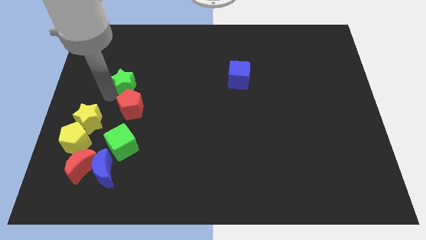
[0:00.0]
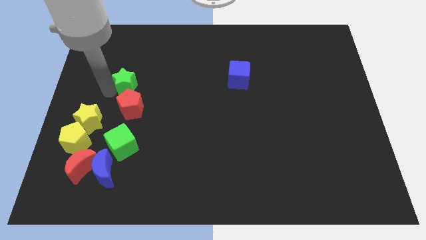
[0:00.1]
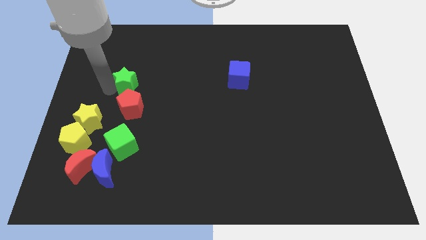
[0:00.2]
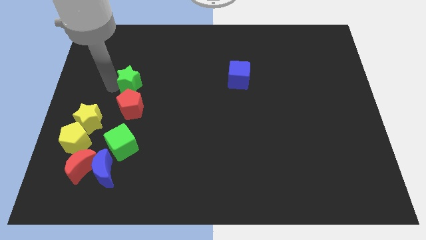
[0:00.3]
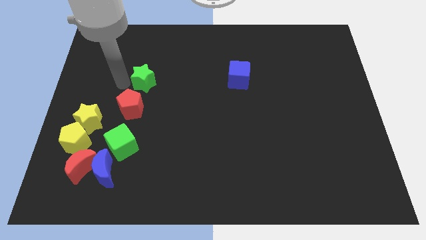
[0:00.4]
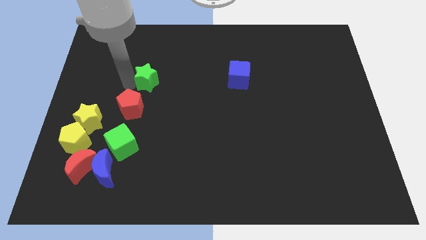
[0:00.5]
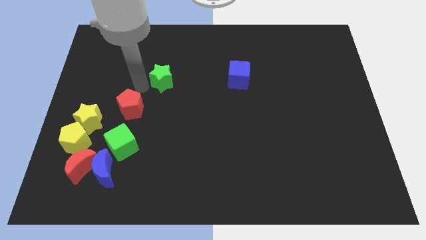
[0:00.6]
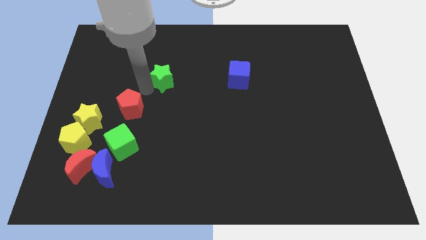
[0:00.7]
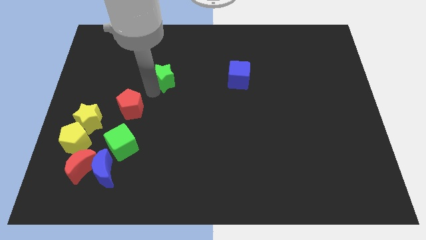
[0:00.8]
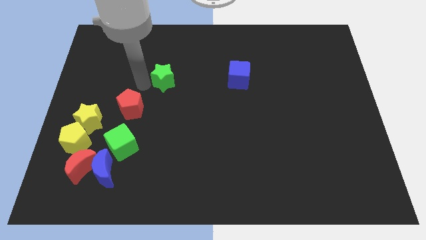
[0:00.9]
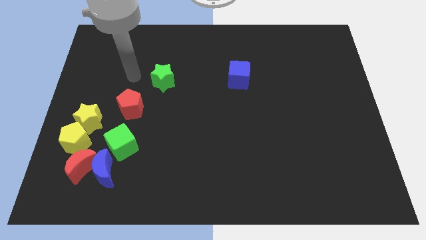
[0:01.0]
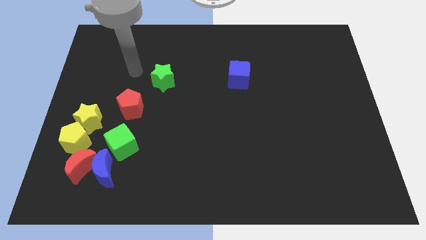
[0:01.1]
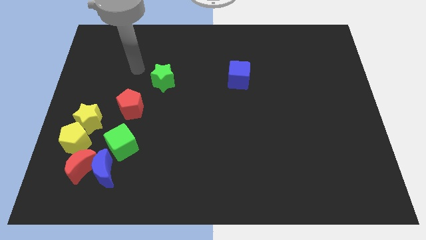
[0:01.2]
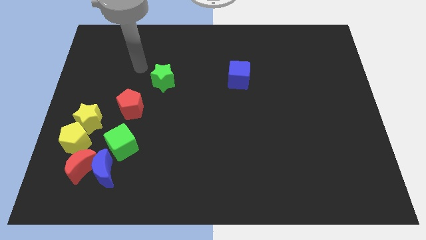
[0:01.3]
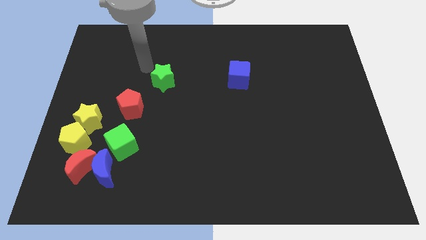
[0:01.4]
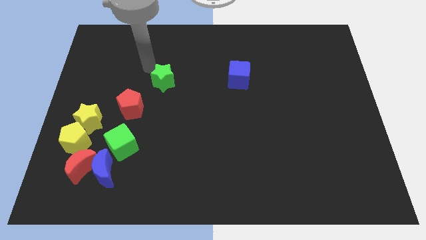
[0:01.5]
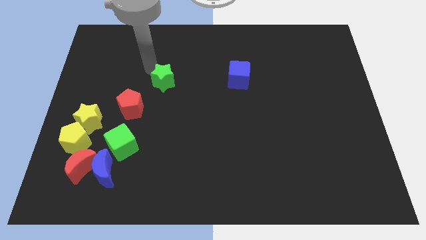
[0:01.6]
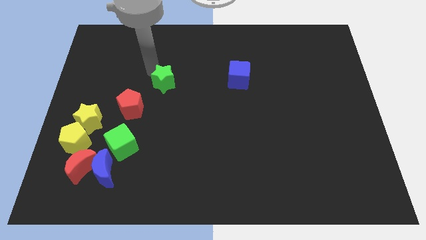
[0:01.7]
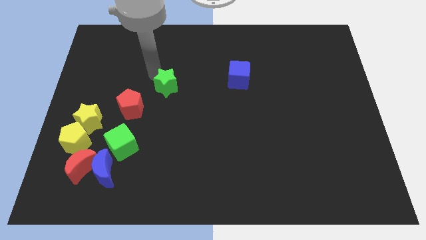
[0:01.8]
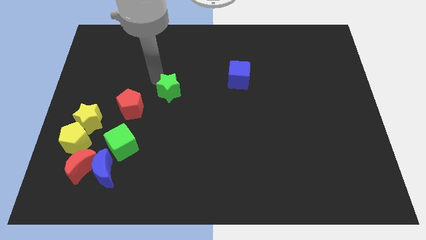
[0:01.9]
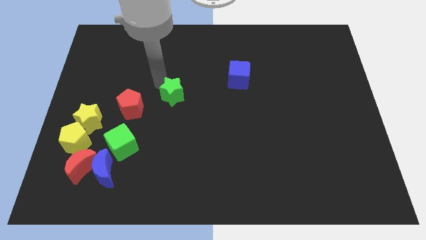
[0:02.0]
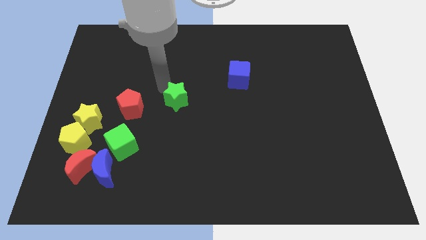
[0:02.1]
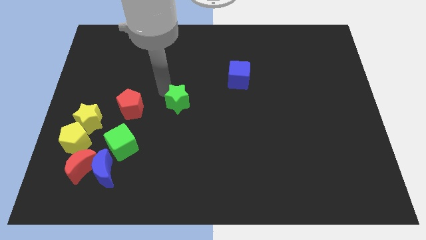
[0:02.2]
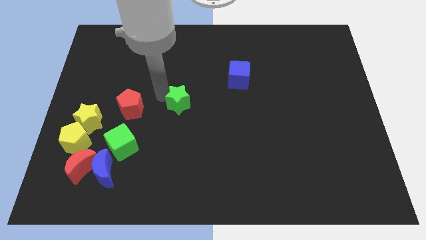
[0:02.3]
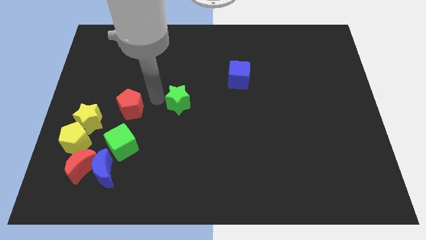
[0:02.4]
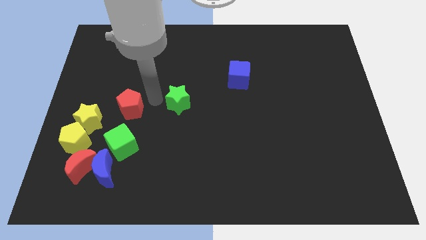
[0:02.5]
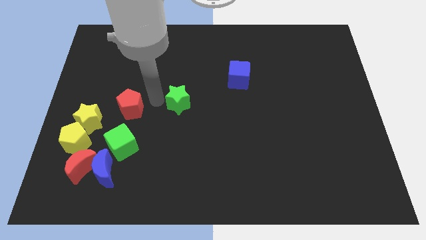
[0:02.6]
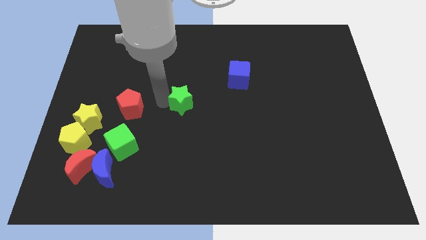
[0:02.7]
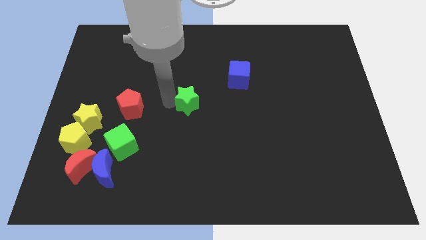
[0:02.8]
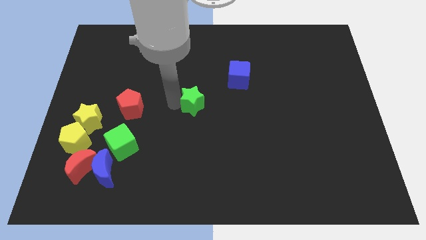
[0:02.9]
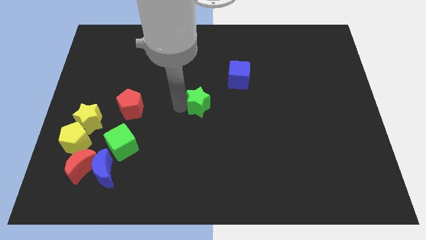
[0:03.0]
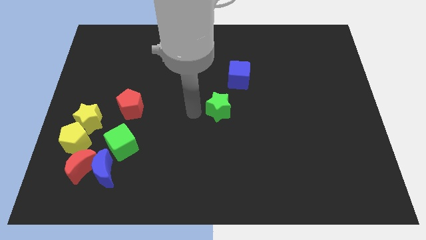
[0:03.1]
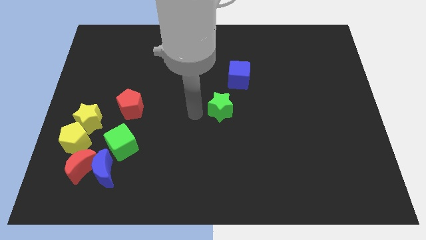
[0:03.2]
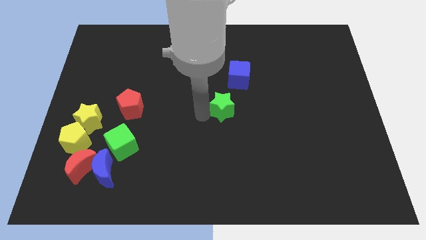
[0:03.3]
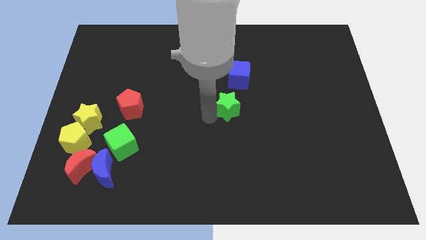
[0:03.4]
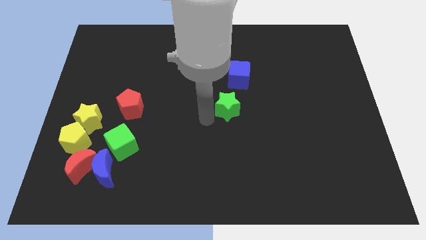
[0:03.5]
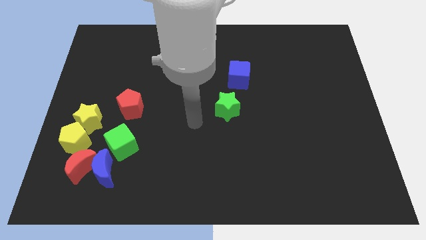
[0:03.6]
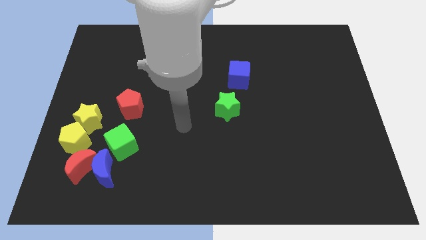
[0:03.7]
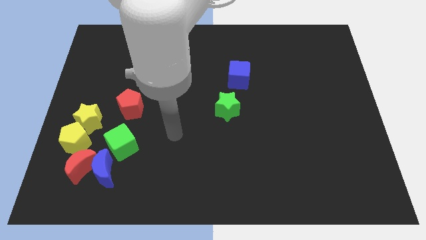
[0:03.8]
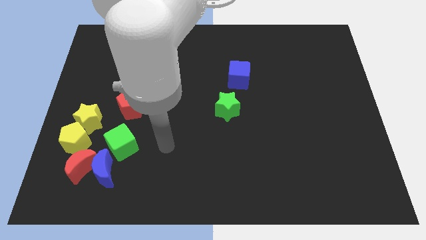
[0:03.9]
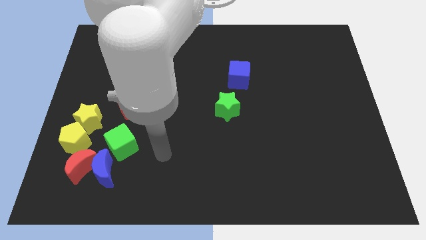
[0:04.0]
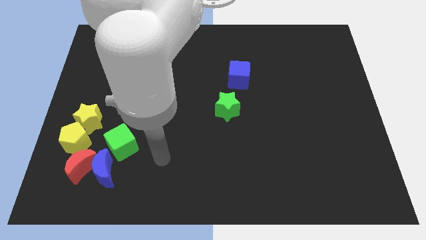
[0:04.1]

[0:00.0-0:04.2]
place the green star to the center of the board

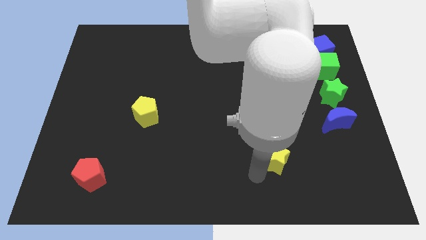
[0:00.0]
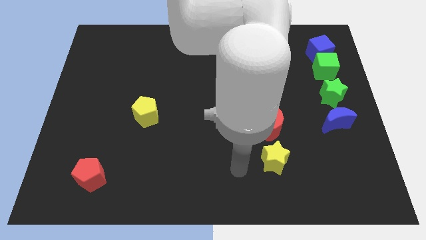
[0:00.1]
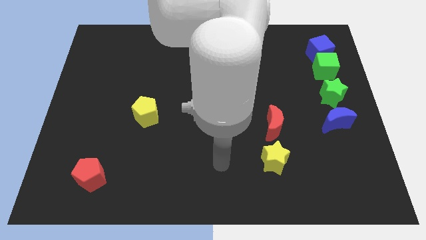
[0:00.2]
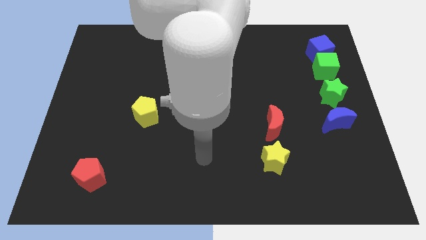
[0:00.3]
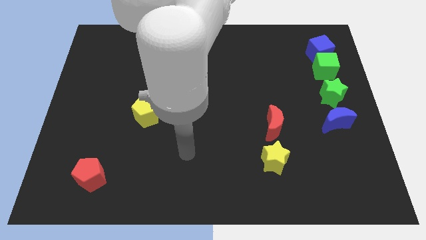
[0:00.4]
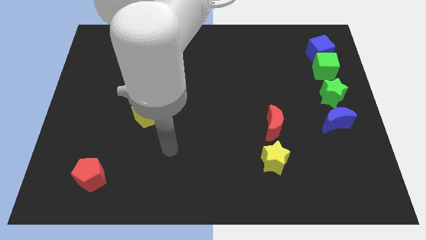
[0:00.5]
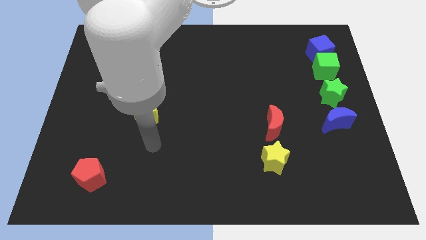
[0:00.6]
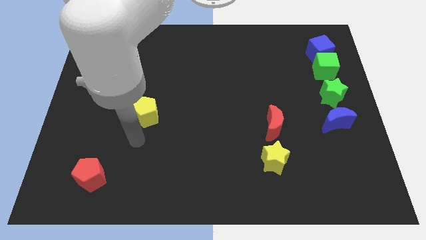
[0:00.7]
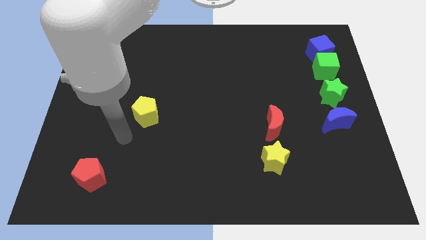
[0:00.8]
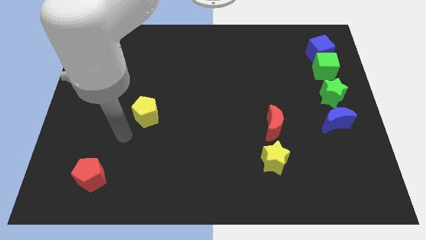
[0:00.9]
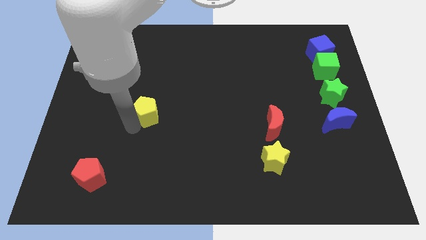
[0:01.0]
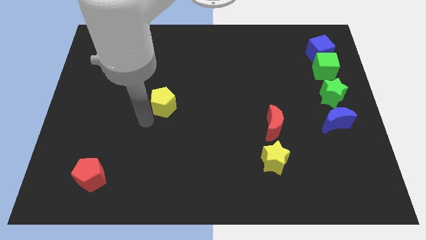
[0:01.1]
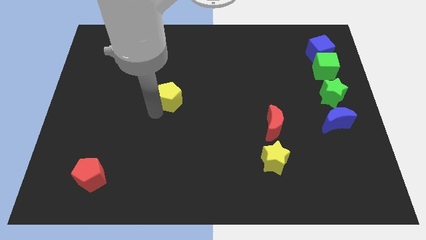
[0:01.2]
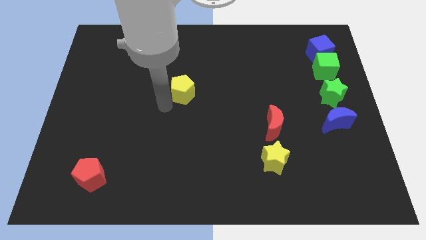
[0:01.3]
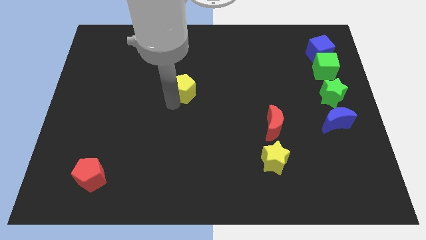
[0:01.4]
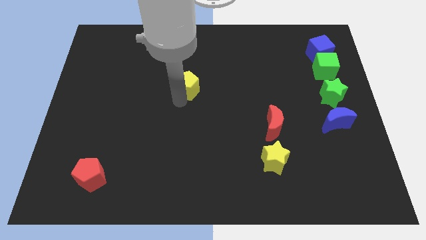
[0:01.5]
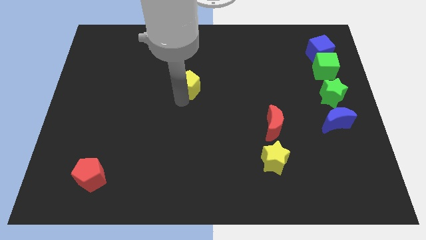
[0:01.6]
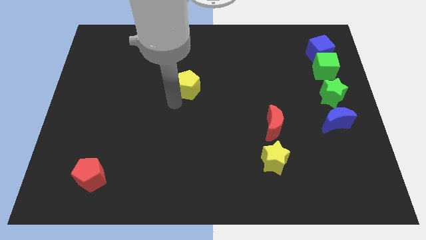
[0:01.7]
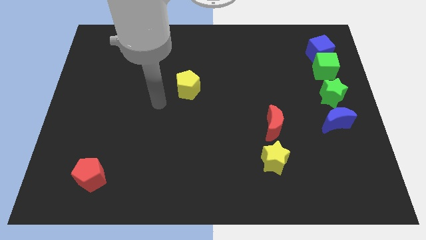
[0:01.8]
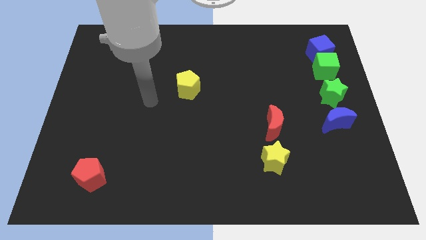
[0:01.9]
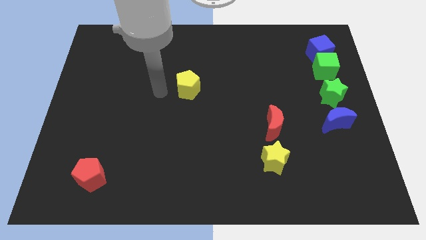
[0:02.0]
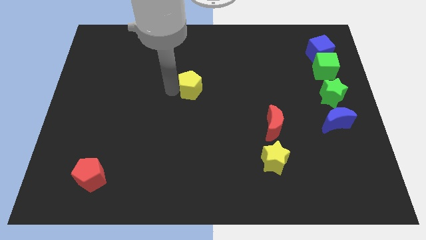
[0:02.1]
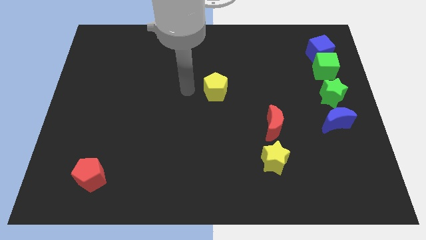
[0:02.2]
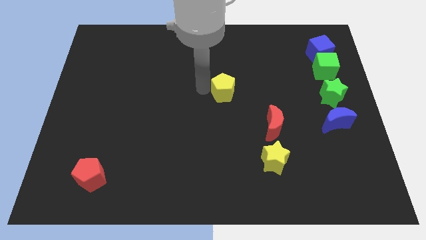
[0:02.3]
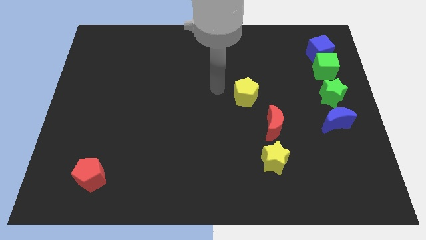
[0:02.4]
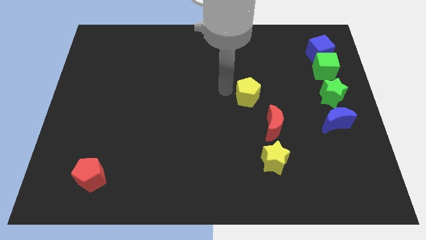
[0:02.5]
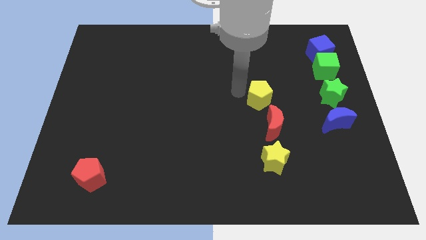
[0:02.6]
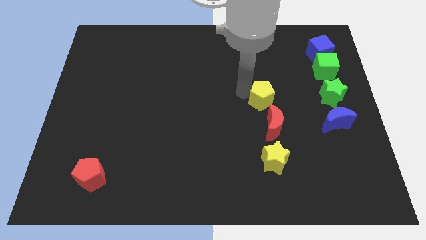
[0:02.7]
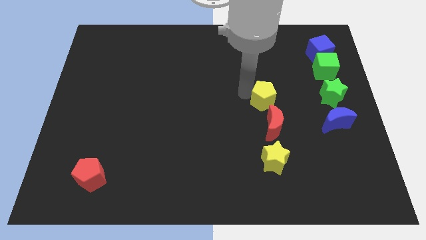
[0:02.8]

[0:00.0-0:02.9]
push the yellow pentagon towards the green star

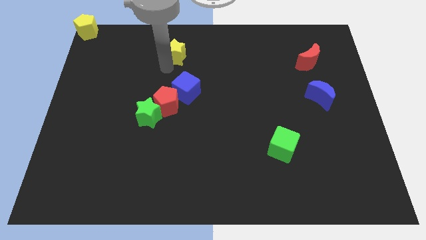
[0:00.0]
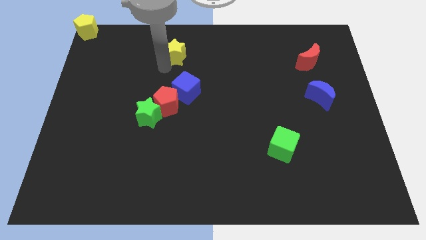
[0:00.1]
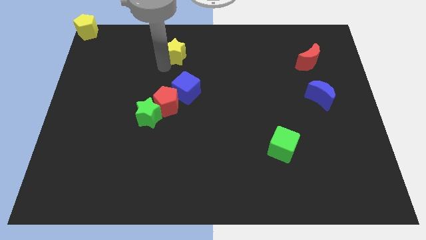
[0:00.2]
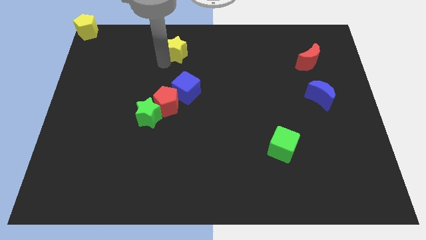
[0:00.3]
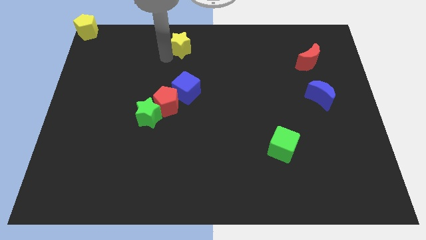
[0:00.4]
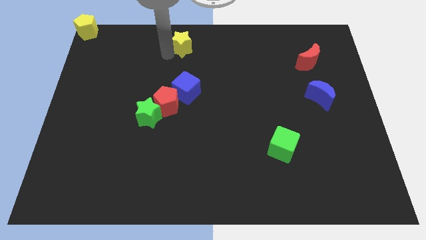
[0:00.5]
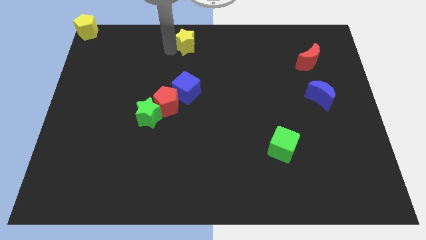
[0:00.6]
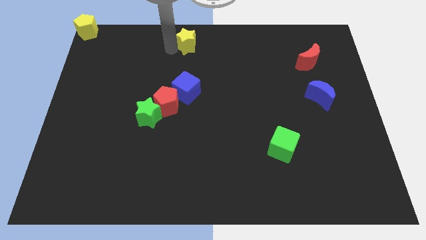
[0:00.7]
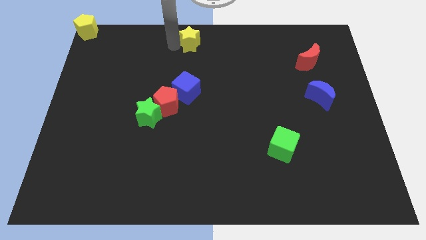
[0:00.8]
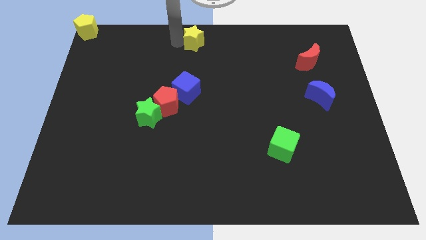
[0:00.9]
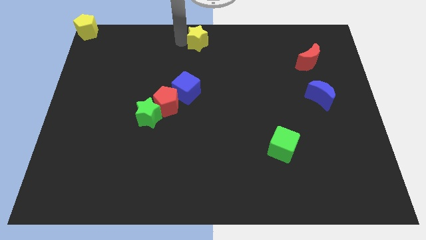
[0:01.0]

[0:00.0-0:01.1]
move yellow star upwards

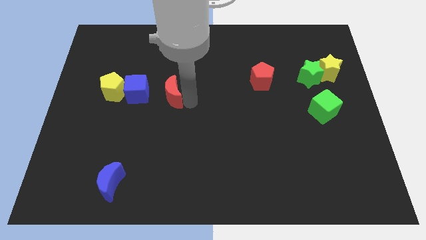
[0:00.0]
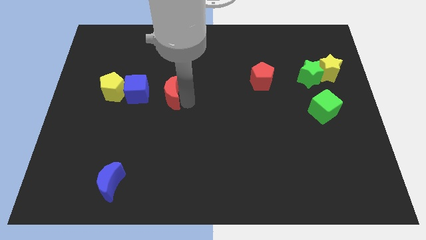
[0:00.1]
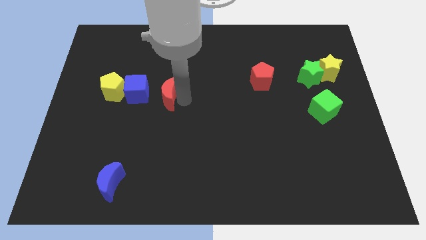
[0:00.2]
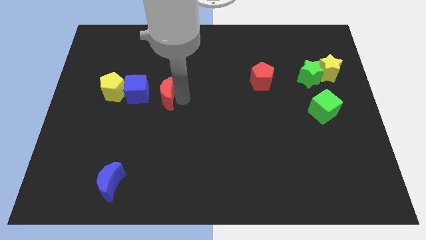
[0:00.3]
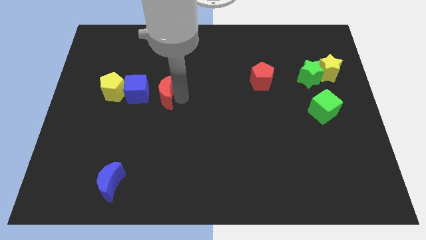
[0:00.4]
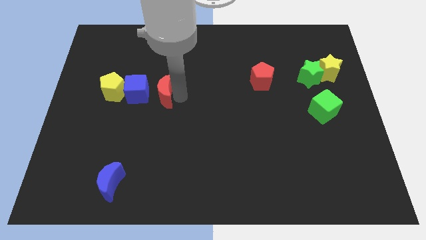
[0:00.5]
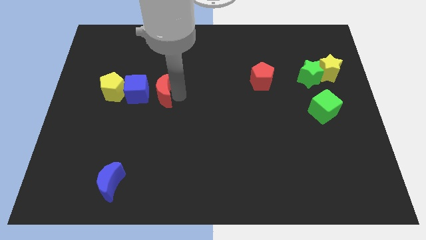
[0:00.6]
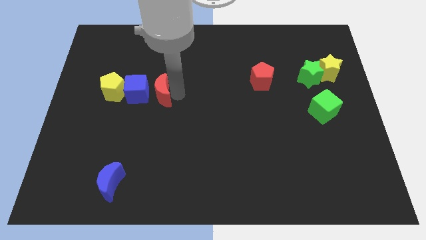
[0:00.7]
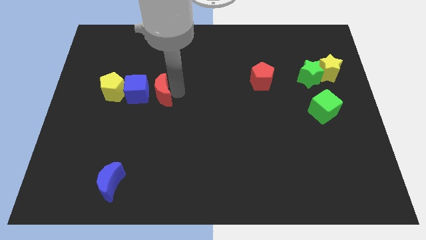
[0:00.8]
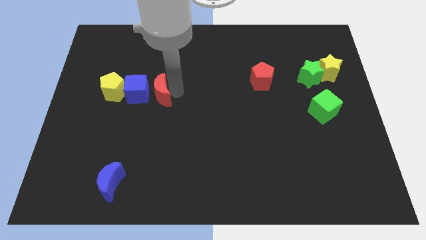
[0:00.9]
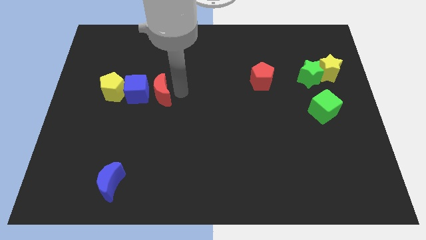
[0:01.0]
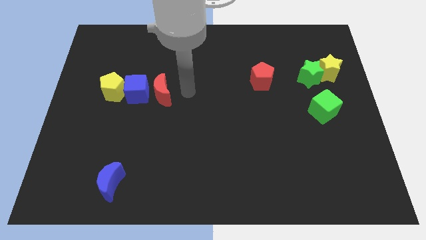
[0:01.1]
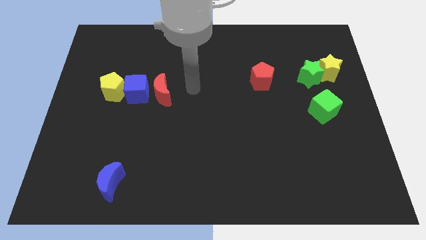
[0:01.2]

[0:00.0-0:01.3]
move the red crescent to the right of the blue cube
